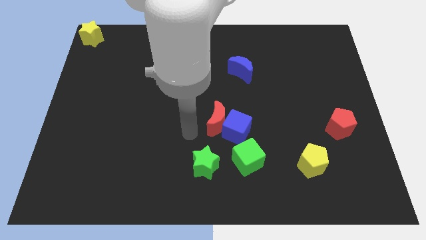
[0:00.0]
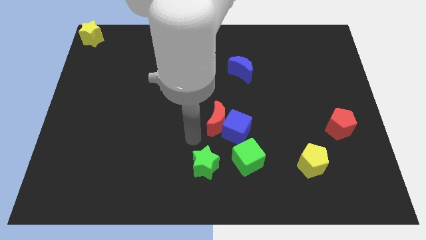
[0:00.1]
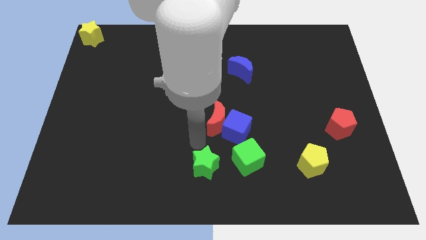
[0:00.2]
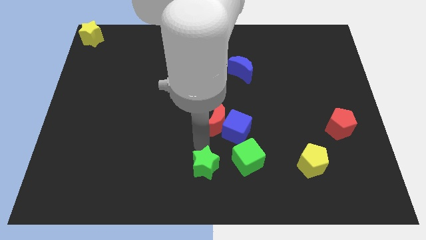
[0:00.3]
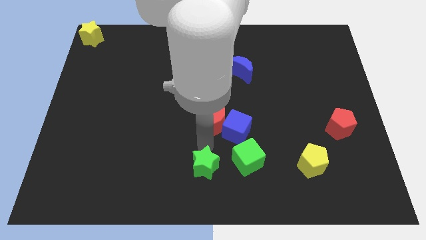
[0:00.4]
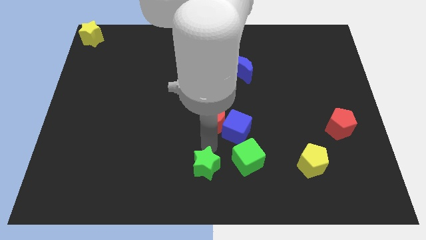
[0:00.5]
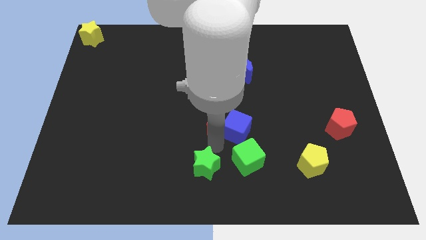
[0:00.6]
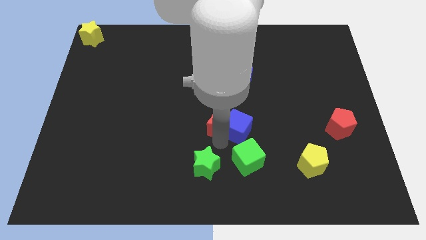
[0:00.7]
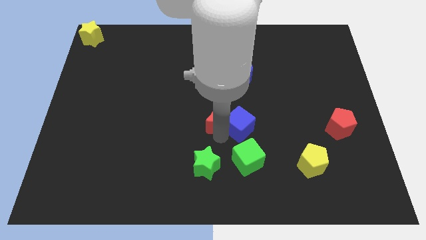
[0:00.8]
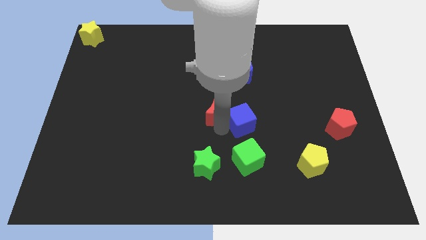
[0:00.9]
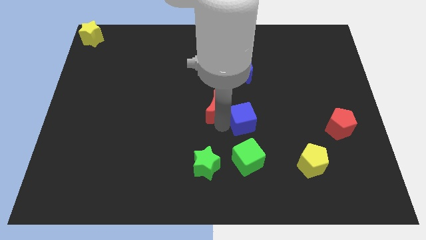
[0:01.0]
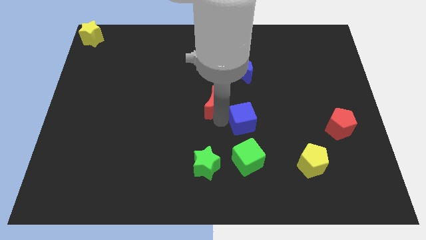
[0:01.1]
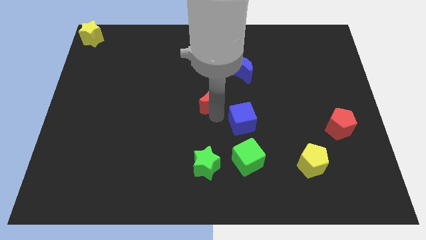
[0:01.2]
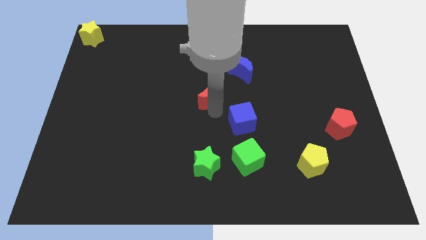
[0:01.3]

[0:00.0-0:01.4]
push the red crescent towards the center of the board

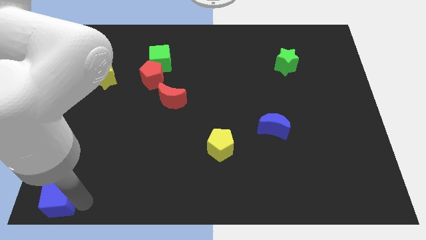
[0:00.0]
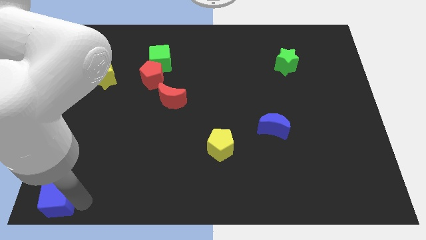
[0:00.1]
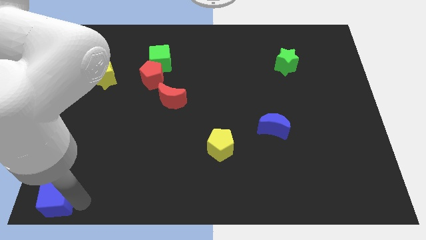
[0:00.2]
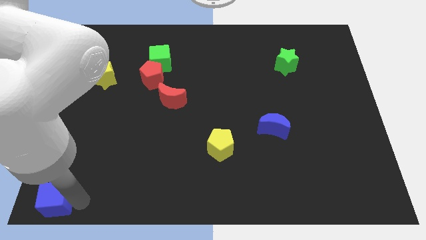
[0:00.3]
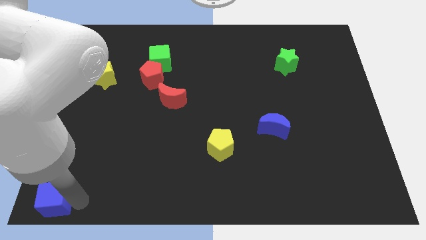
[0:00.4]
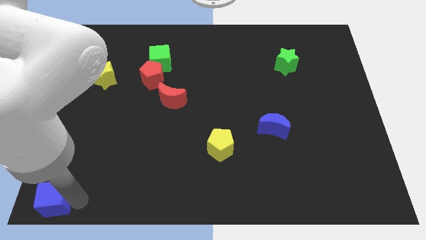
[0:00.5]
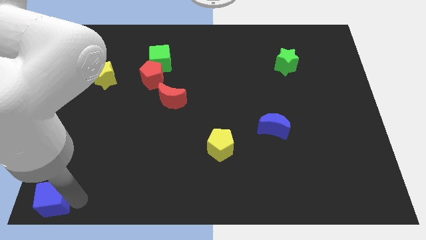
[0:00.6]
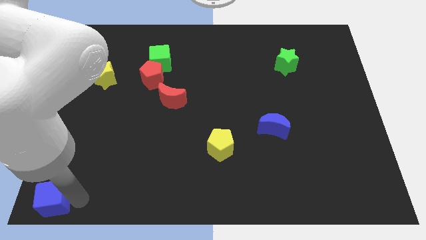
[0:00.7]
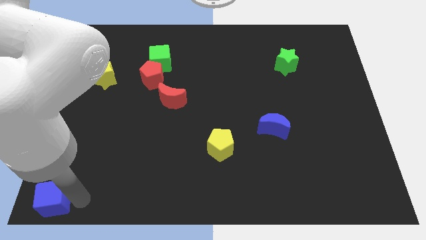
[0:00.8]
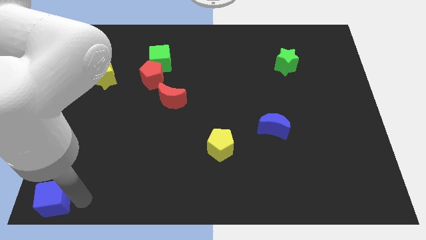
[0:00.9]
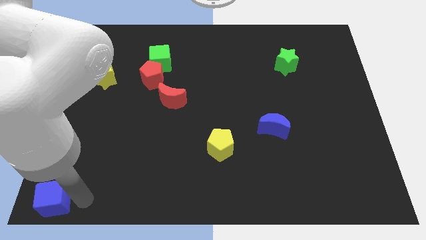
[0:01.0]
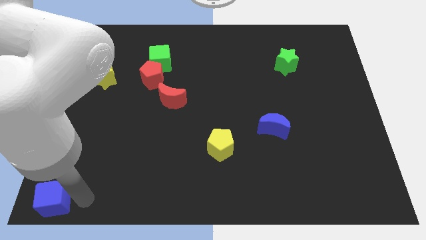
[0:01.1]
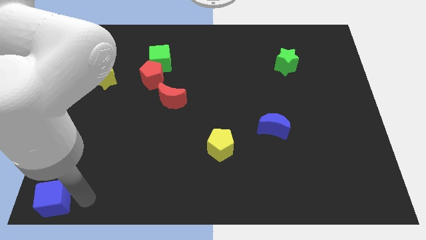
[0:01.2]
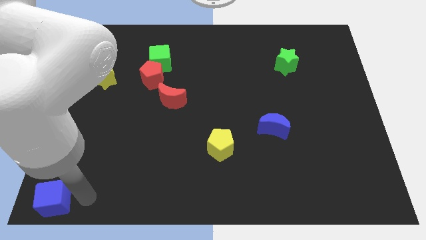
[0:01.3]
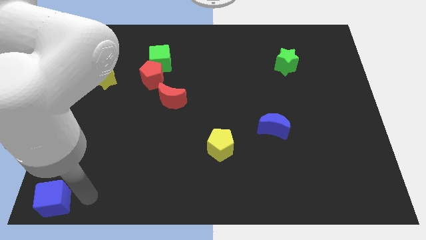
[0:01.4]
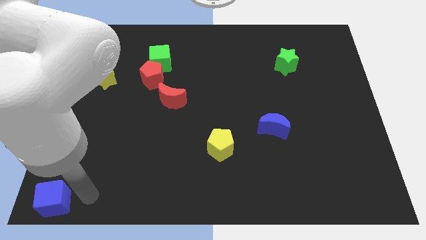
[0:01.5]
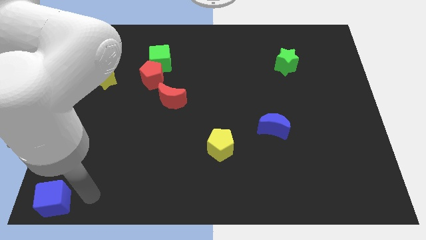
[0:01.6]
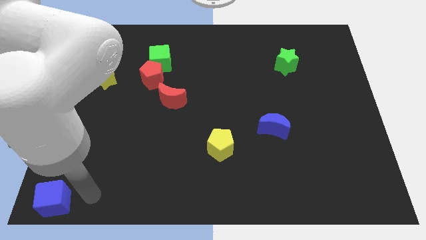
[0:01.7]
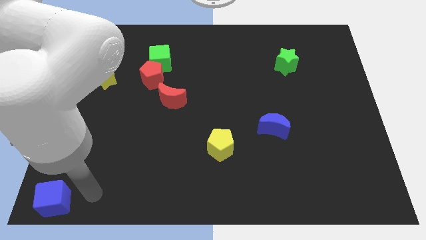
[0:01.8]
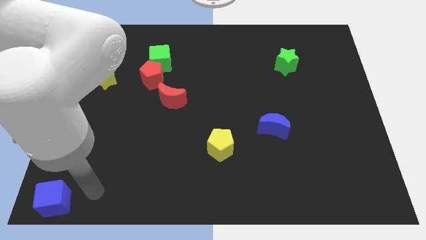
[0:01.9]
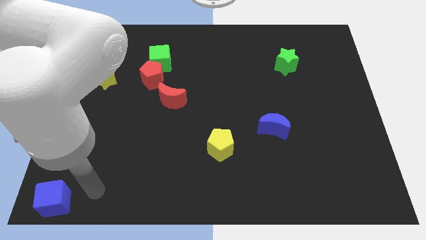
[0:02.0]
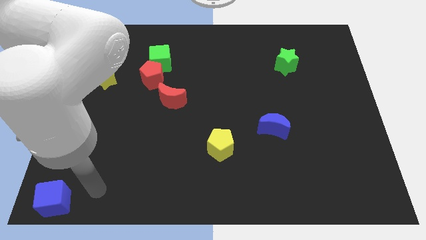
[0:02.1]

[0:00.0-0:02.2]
push the blue cube to the bottom left corner of the board

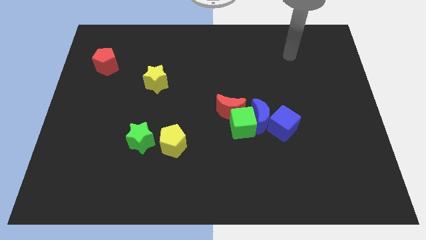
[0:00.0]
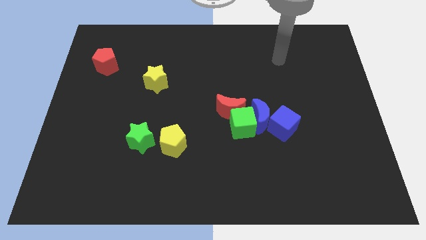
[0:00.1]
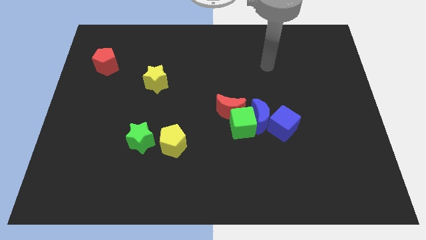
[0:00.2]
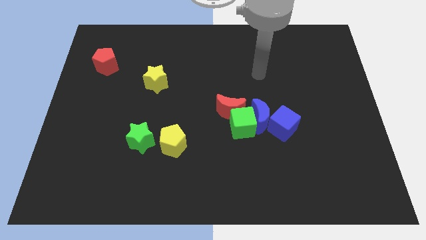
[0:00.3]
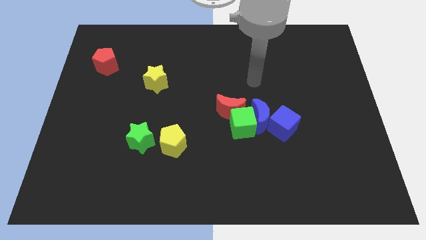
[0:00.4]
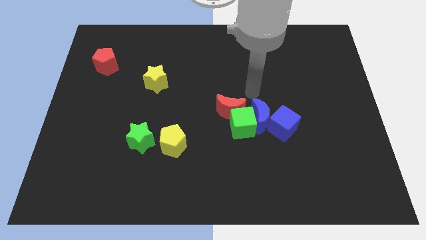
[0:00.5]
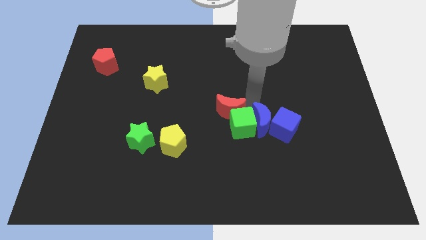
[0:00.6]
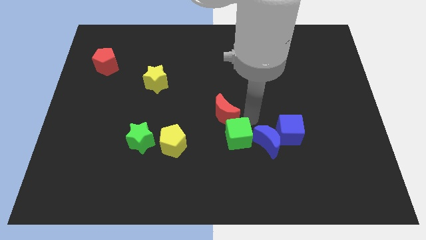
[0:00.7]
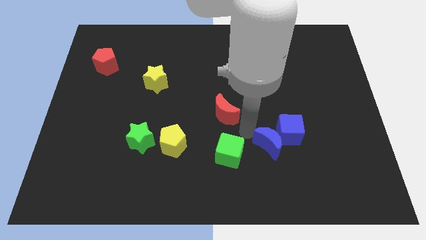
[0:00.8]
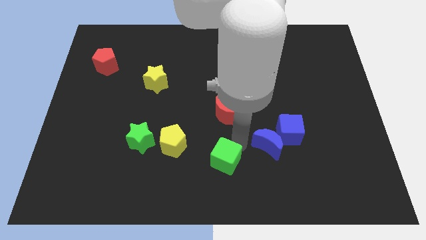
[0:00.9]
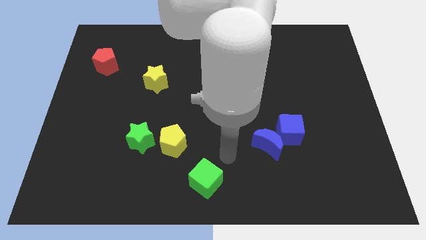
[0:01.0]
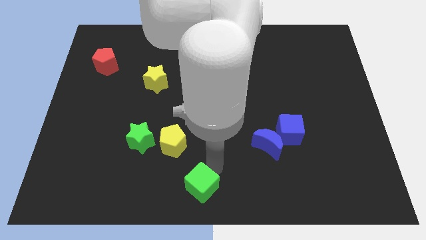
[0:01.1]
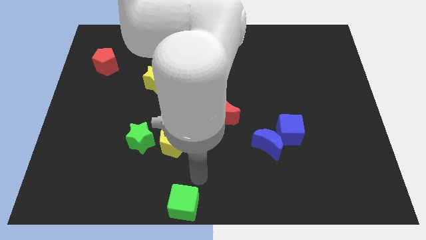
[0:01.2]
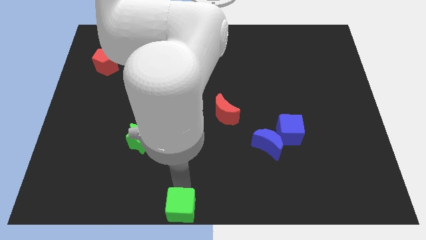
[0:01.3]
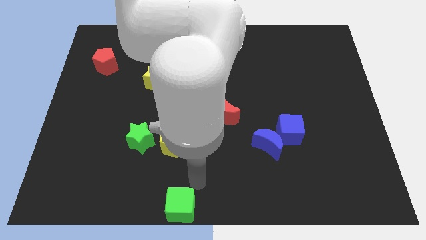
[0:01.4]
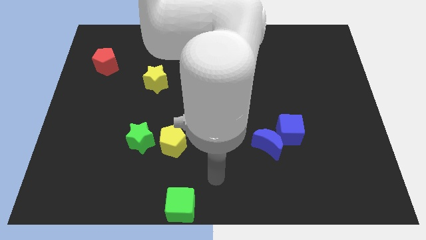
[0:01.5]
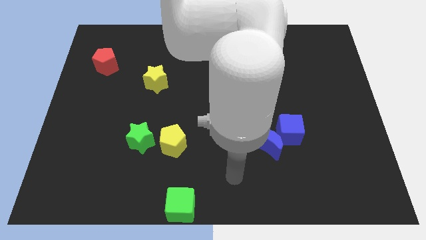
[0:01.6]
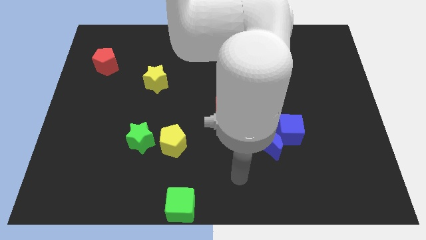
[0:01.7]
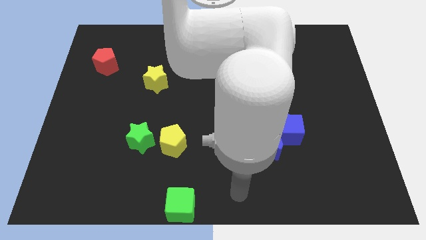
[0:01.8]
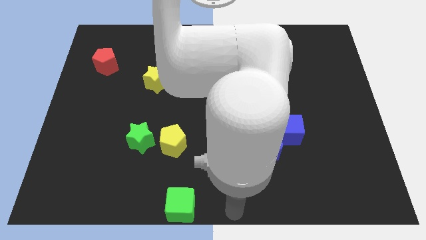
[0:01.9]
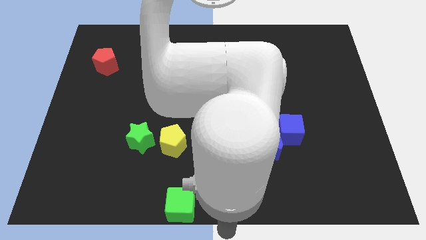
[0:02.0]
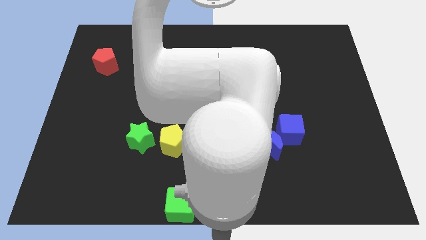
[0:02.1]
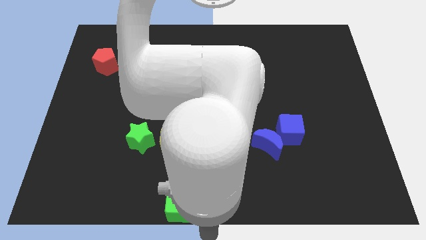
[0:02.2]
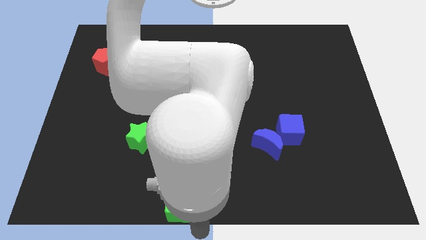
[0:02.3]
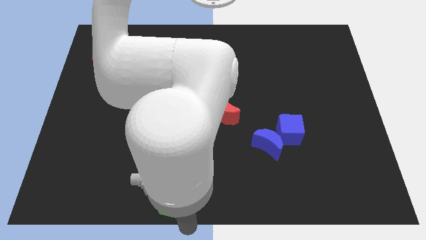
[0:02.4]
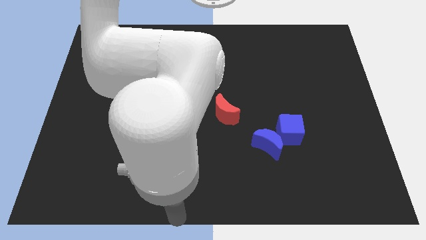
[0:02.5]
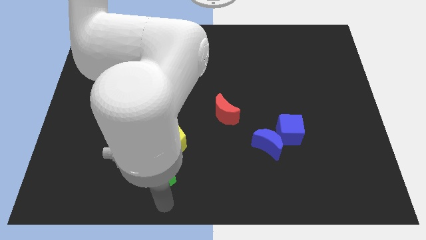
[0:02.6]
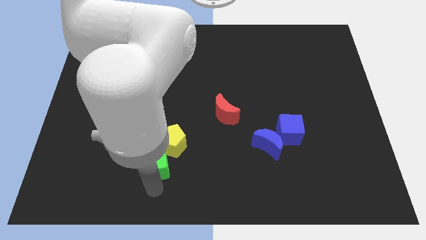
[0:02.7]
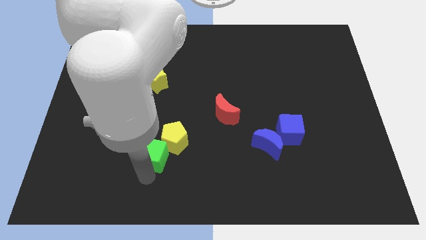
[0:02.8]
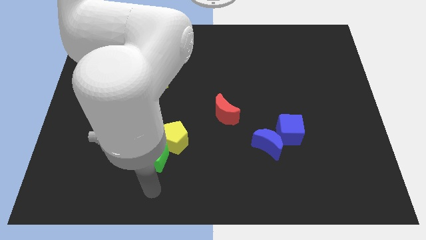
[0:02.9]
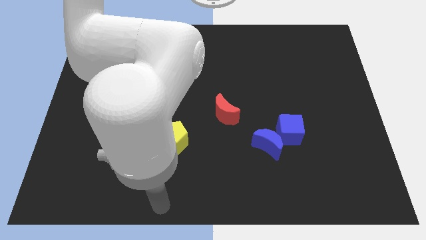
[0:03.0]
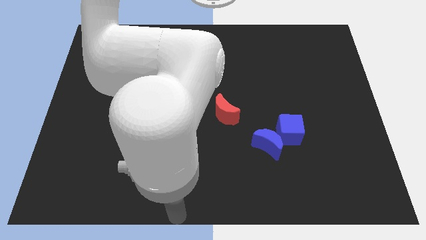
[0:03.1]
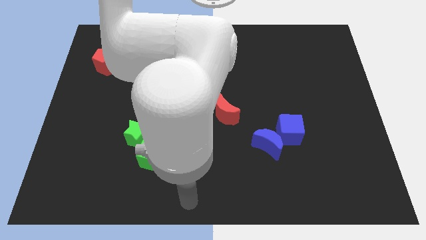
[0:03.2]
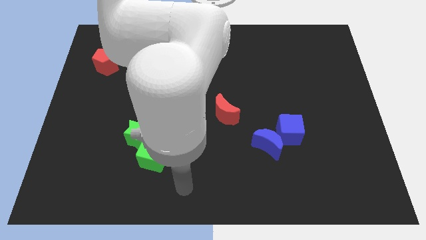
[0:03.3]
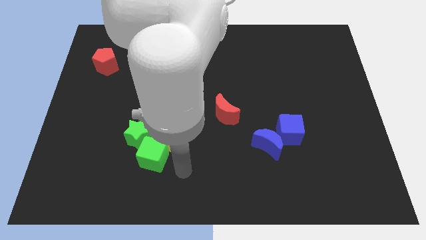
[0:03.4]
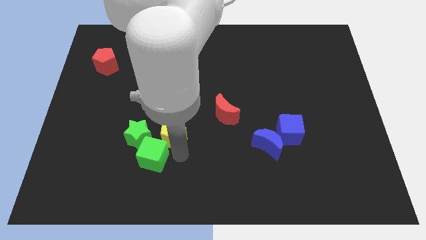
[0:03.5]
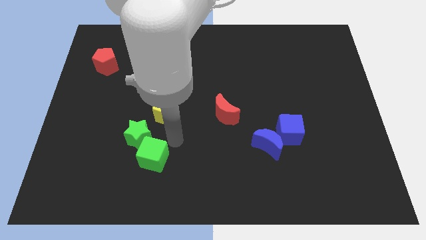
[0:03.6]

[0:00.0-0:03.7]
place the green cube to the bottom right of green star

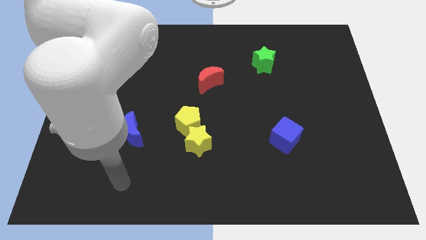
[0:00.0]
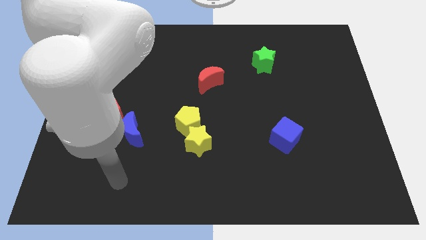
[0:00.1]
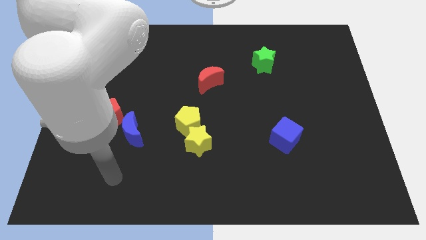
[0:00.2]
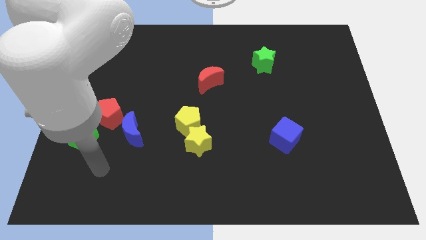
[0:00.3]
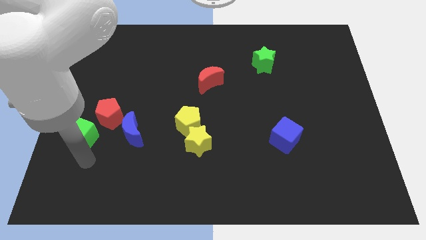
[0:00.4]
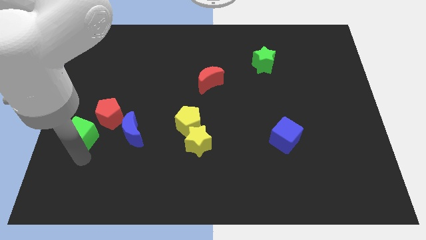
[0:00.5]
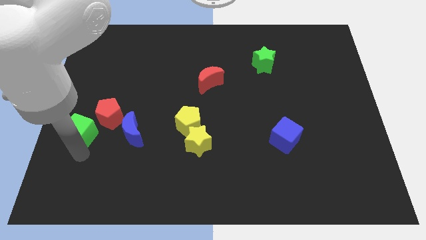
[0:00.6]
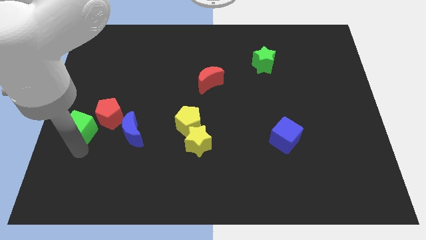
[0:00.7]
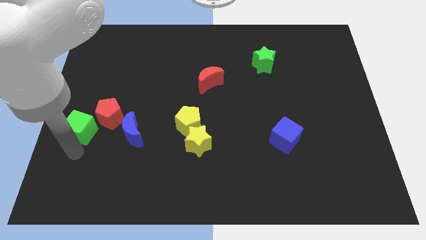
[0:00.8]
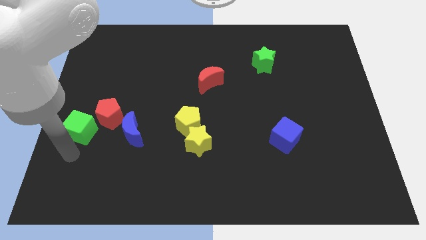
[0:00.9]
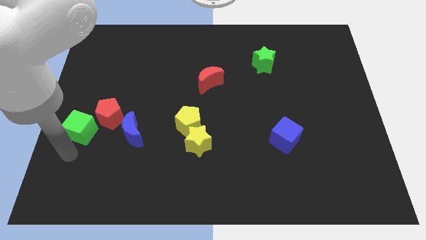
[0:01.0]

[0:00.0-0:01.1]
move your arm below to the green cube

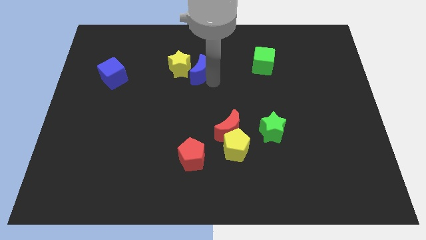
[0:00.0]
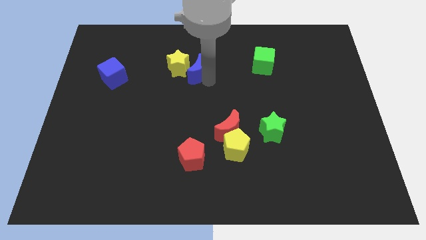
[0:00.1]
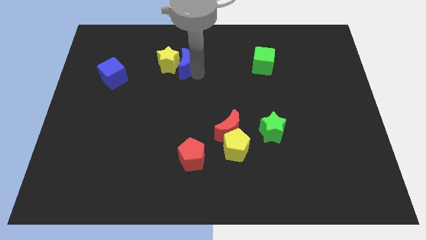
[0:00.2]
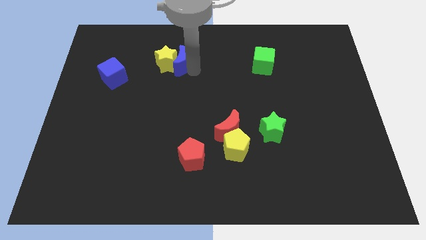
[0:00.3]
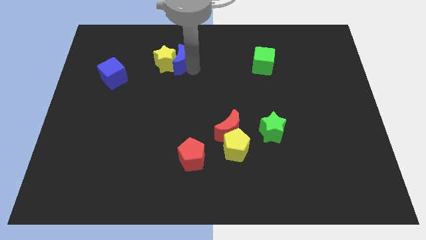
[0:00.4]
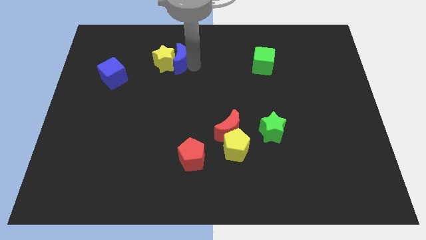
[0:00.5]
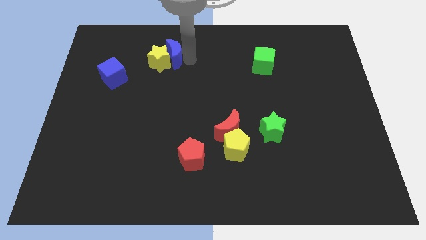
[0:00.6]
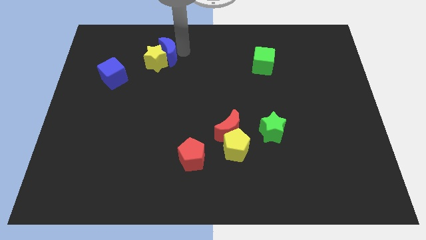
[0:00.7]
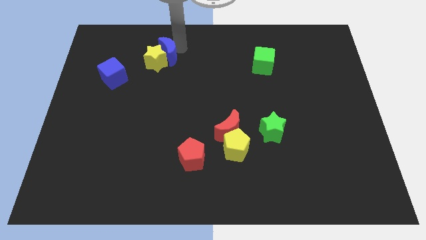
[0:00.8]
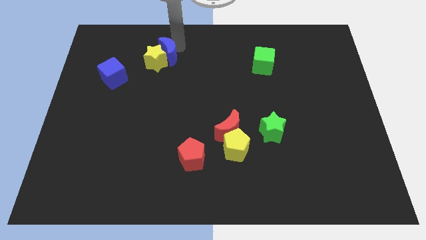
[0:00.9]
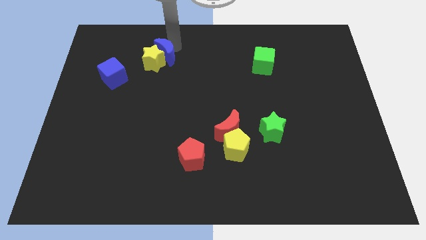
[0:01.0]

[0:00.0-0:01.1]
move the blue crescent and yellow star at the top right of the blue cube
